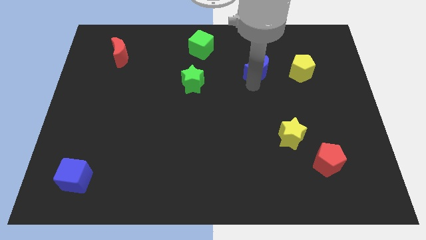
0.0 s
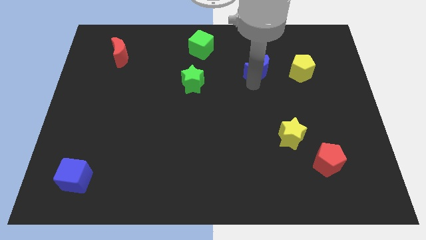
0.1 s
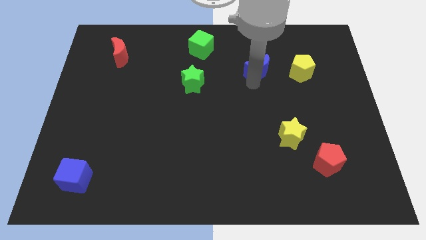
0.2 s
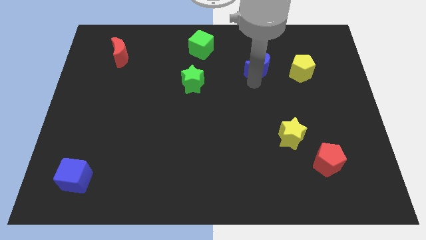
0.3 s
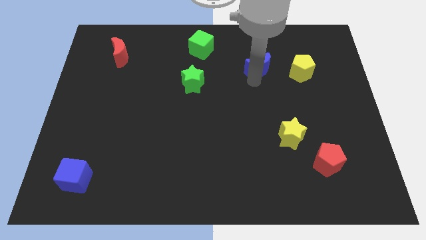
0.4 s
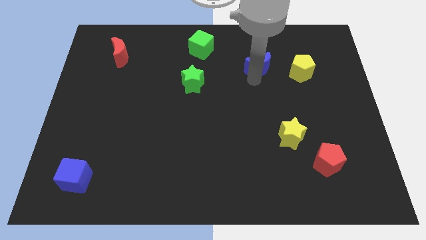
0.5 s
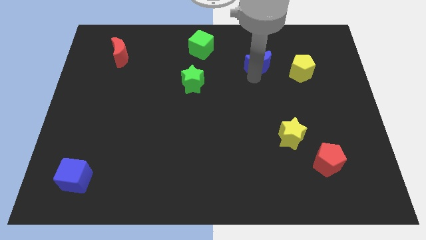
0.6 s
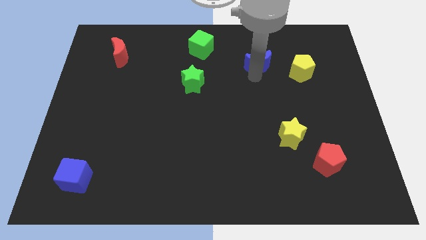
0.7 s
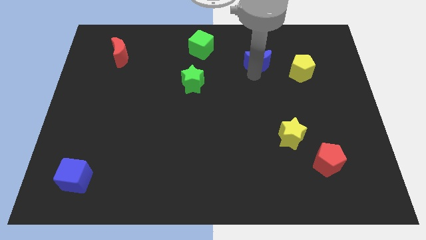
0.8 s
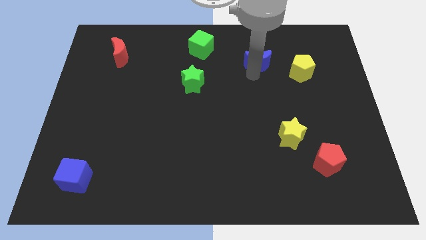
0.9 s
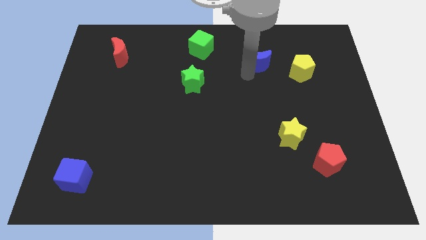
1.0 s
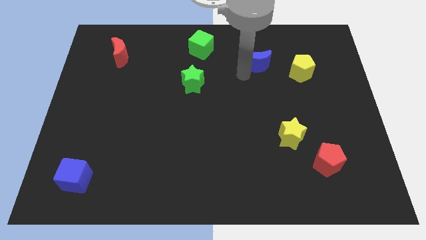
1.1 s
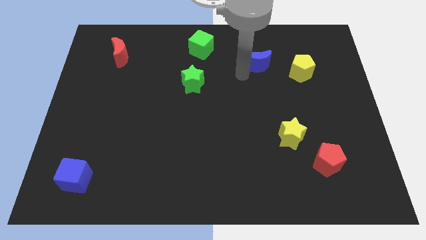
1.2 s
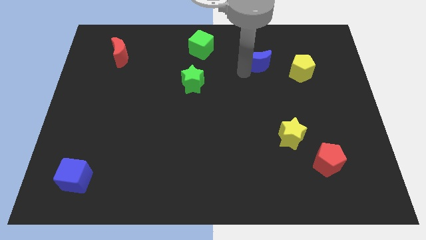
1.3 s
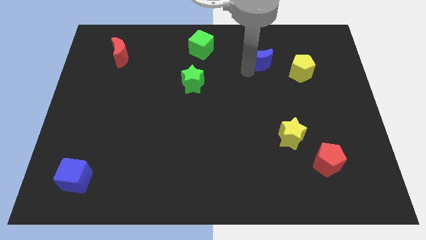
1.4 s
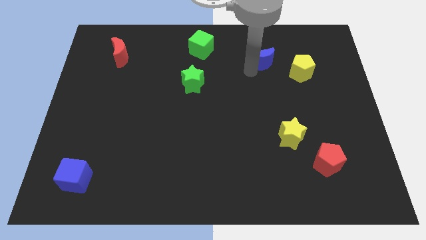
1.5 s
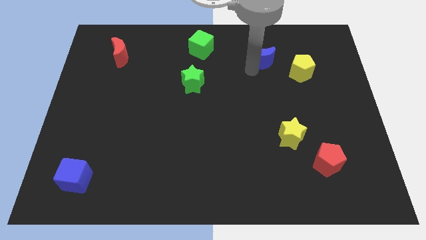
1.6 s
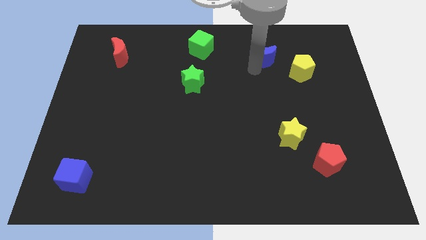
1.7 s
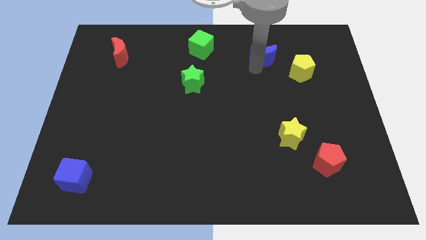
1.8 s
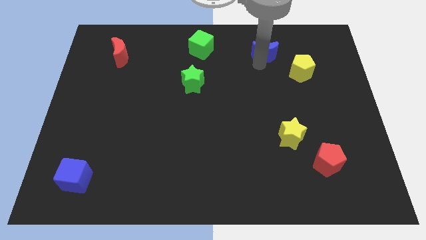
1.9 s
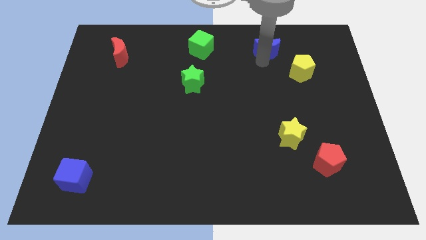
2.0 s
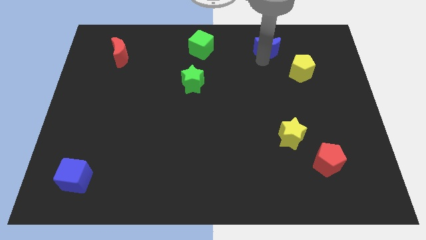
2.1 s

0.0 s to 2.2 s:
move the blue crescent to the right side of the green cube

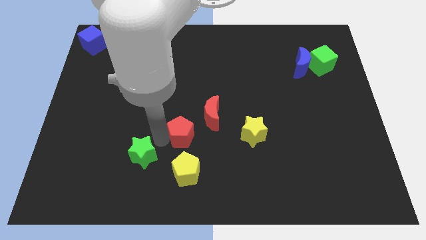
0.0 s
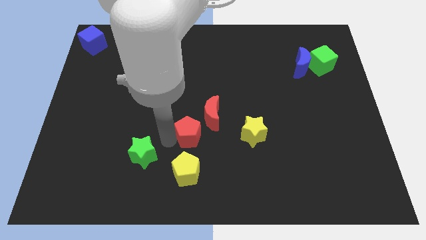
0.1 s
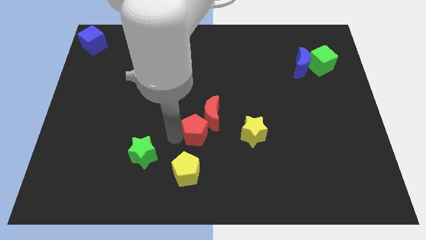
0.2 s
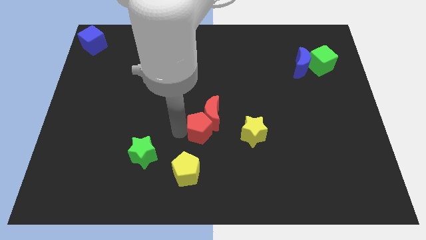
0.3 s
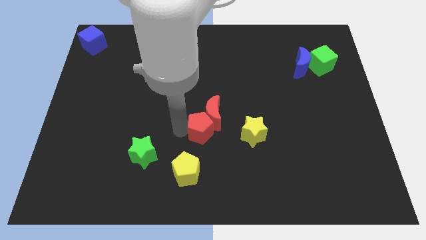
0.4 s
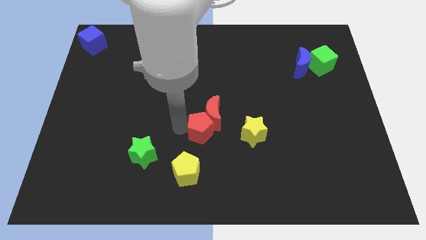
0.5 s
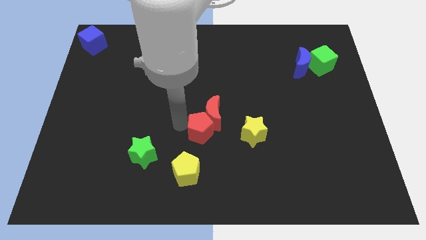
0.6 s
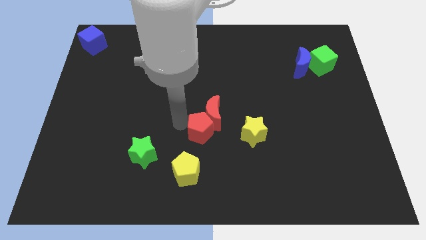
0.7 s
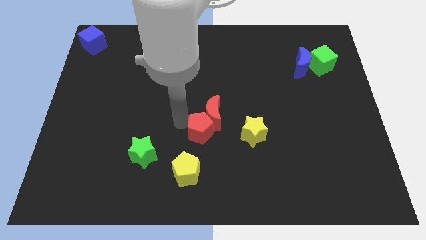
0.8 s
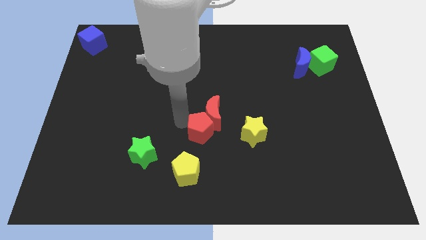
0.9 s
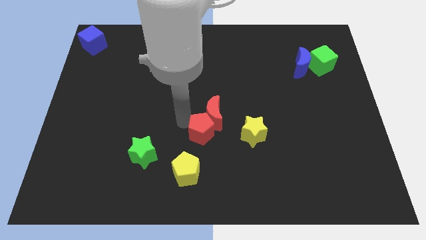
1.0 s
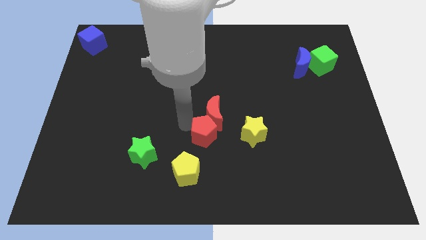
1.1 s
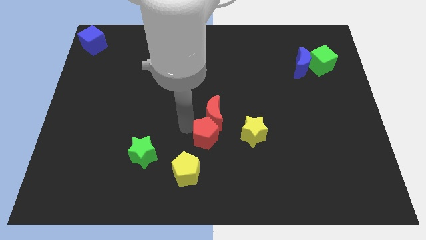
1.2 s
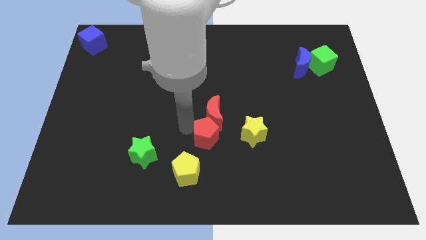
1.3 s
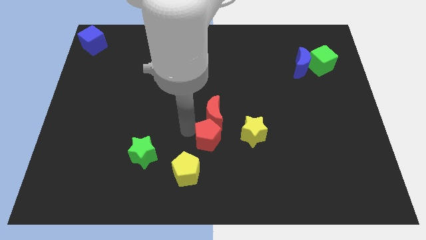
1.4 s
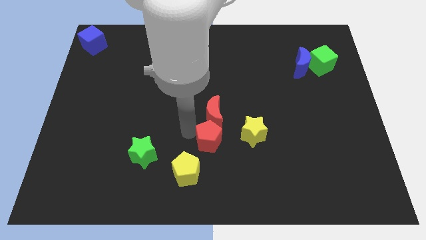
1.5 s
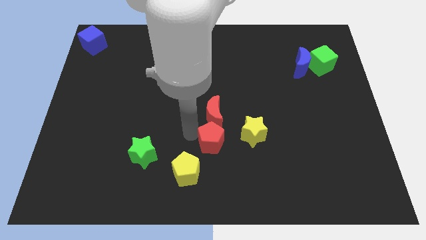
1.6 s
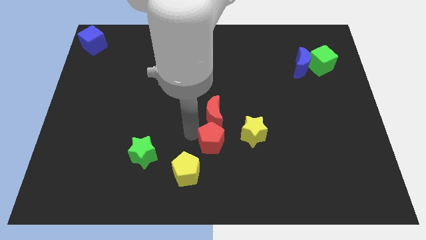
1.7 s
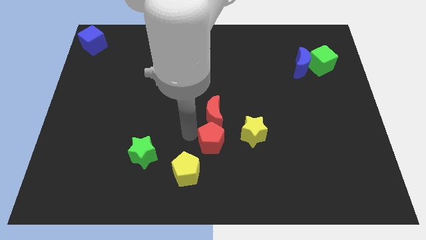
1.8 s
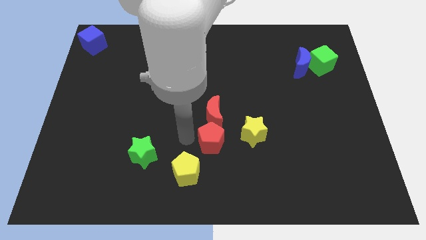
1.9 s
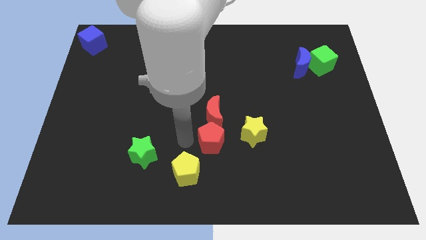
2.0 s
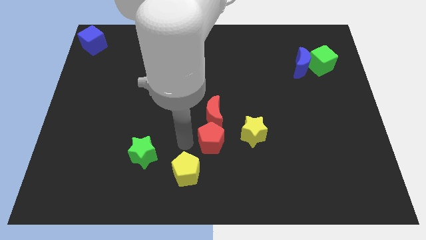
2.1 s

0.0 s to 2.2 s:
place the red pentagon below the red crescent

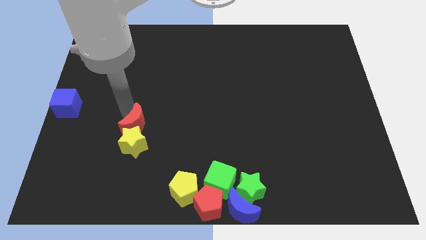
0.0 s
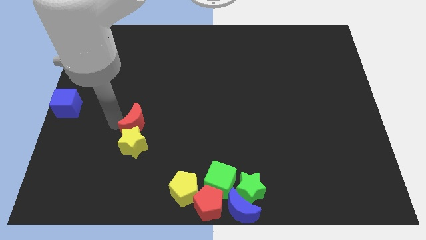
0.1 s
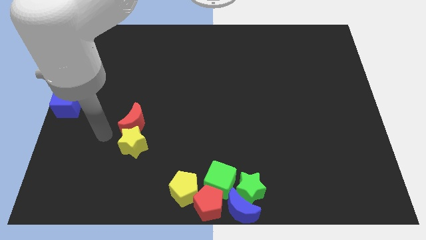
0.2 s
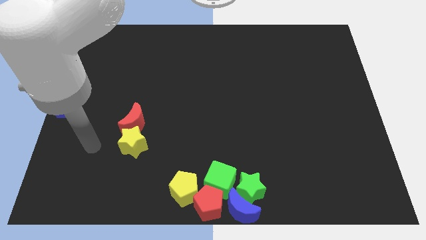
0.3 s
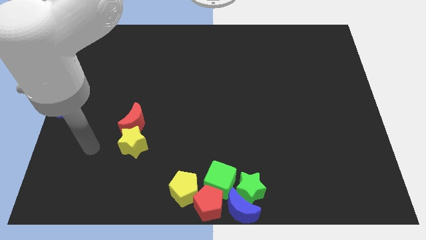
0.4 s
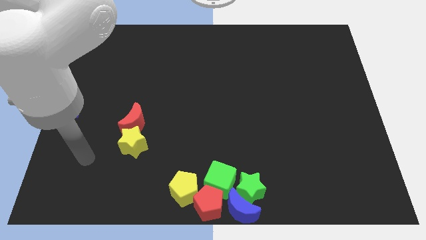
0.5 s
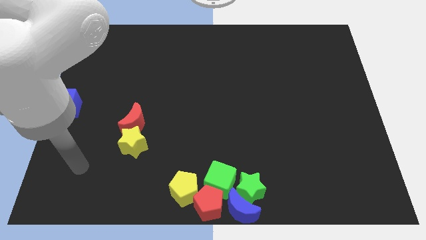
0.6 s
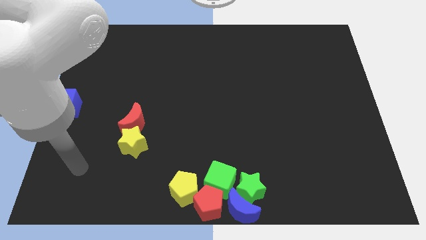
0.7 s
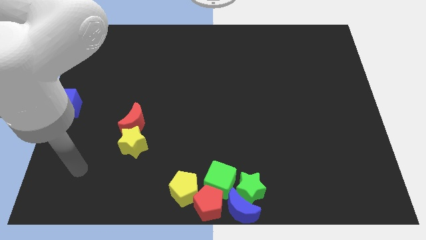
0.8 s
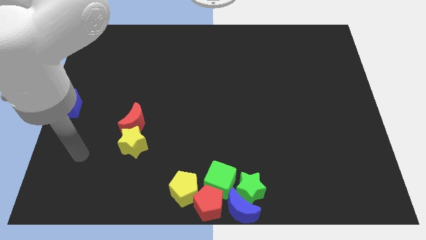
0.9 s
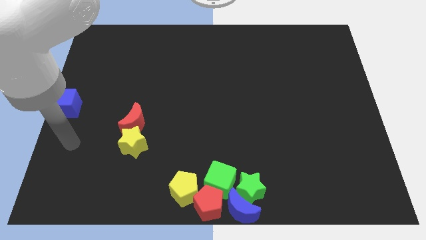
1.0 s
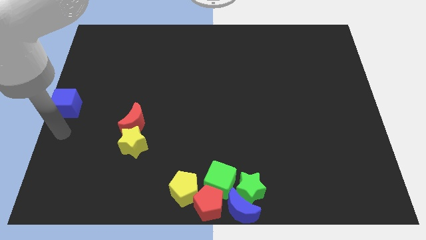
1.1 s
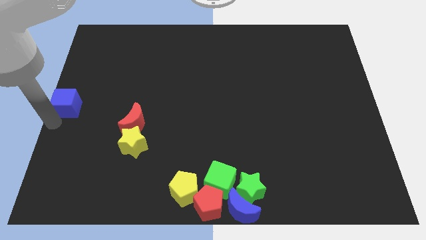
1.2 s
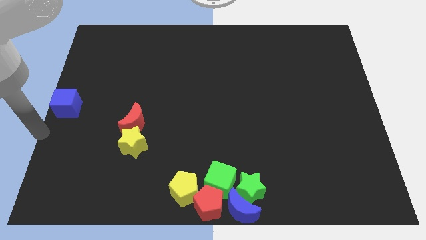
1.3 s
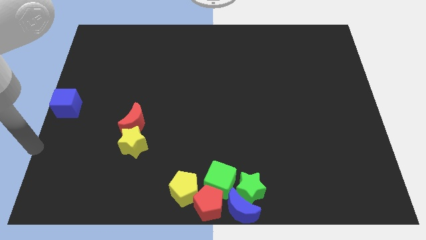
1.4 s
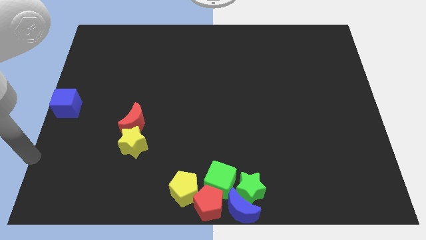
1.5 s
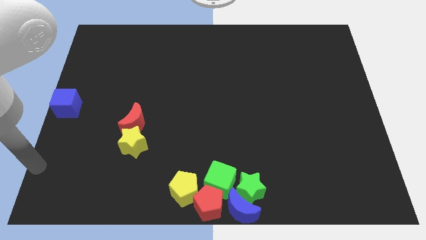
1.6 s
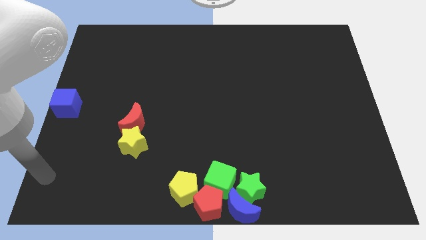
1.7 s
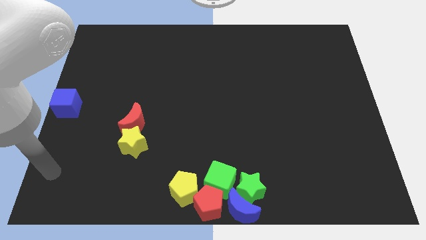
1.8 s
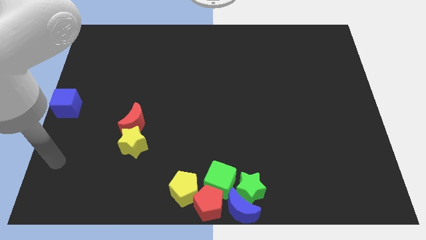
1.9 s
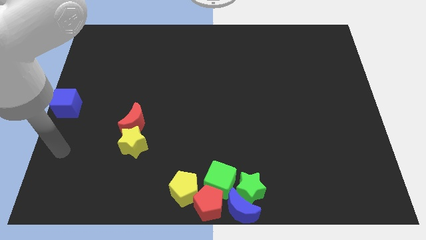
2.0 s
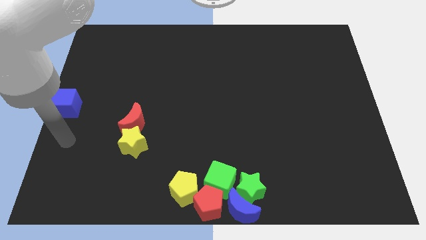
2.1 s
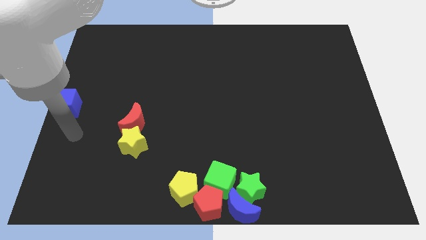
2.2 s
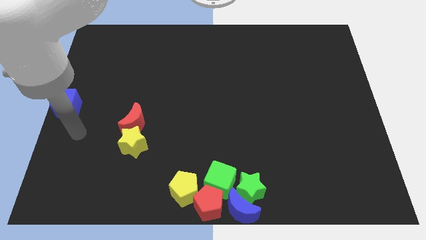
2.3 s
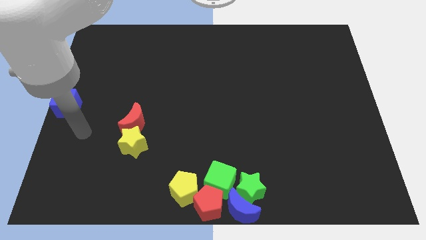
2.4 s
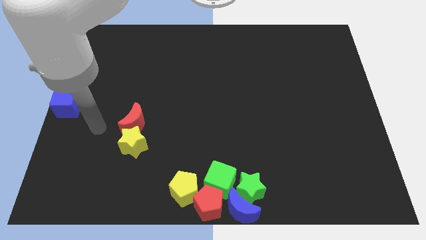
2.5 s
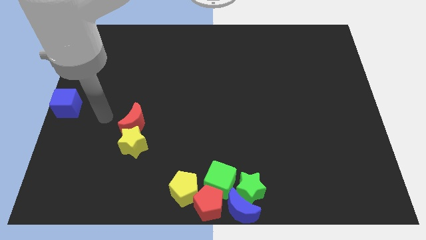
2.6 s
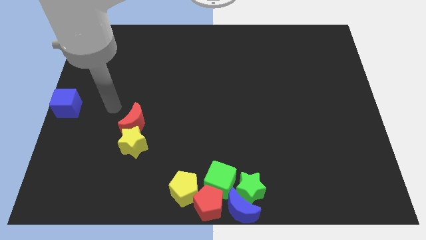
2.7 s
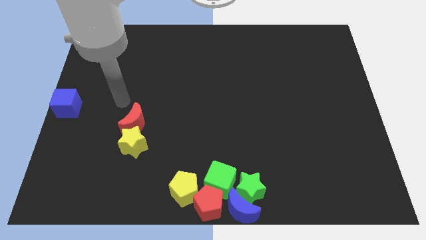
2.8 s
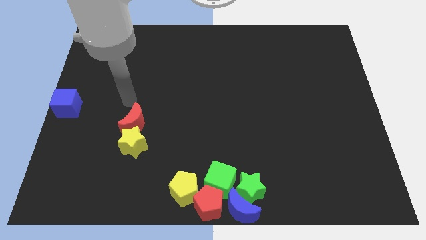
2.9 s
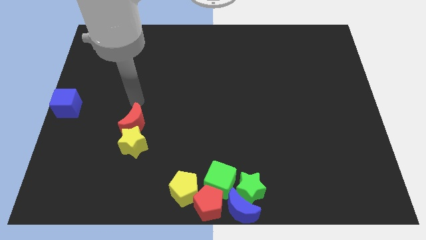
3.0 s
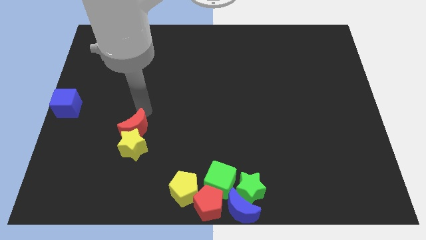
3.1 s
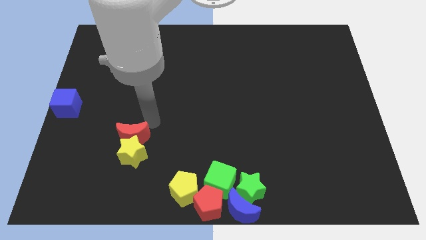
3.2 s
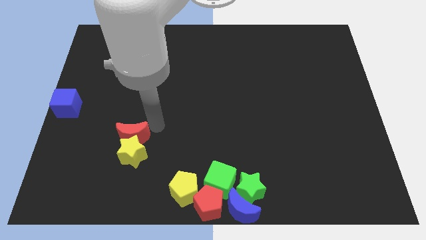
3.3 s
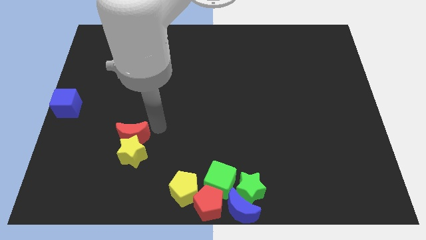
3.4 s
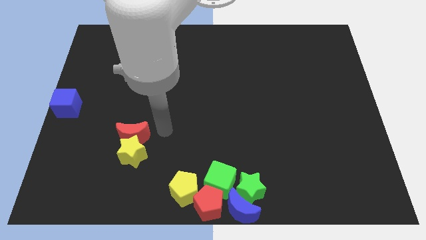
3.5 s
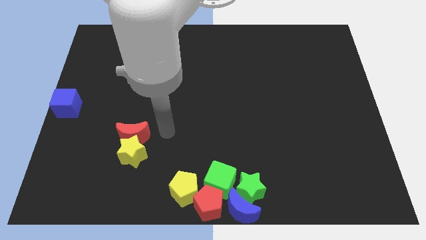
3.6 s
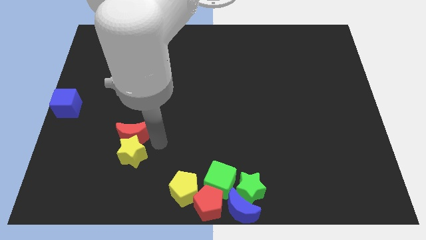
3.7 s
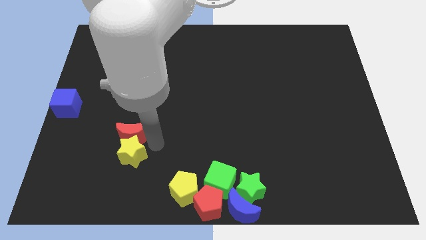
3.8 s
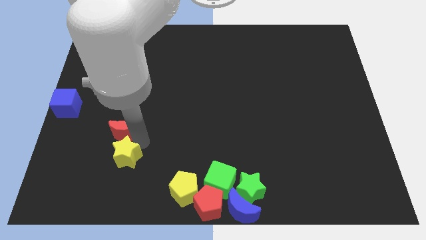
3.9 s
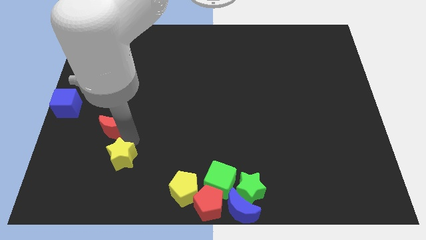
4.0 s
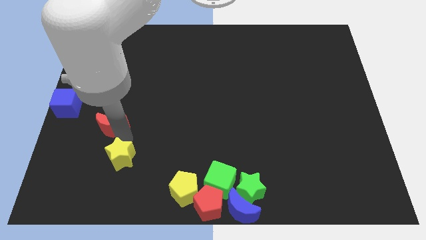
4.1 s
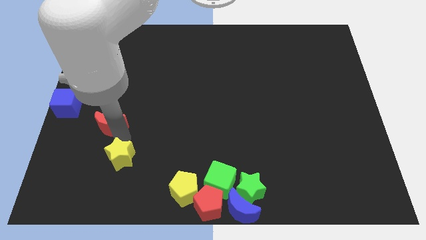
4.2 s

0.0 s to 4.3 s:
push the red crescent and yellow star slightly towards left

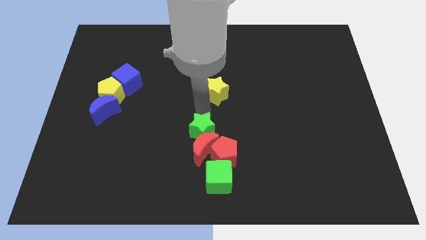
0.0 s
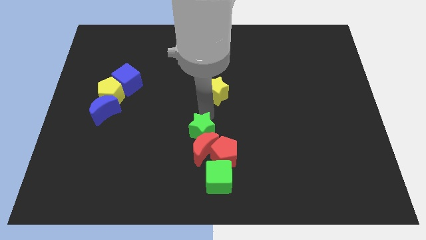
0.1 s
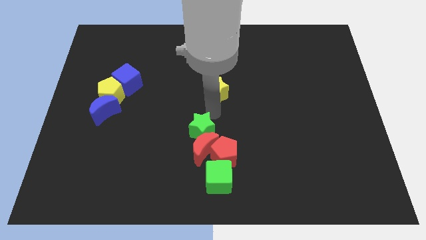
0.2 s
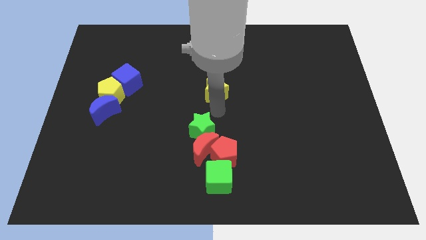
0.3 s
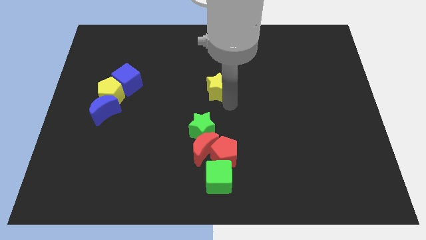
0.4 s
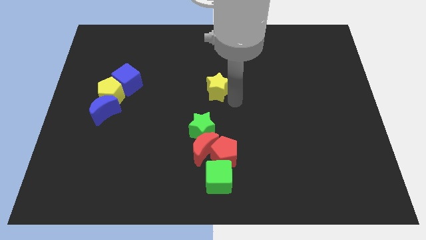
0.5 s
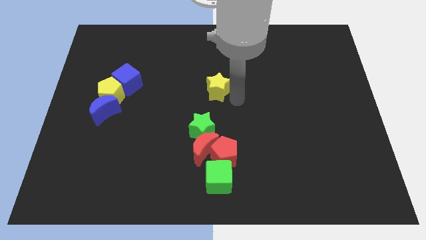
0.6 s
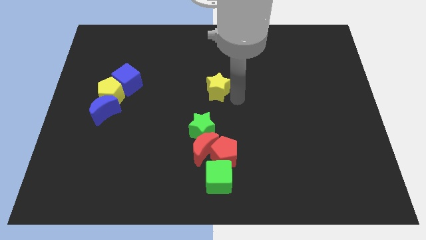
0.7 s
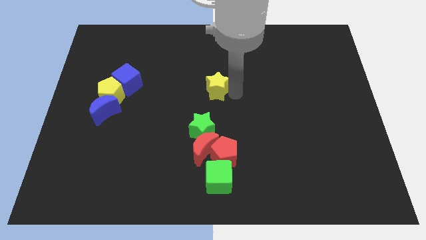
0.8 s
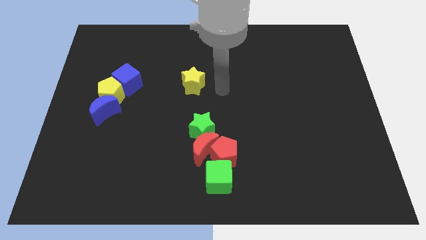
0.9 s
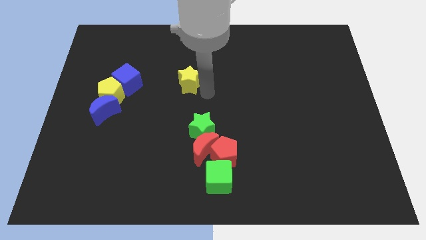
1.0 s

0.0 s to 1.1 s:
move yellow star vertically above green star
